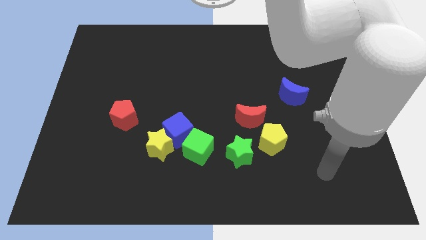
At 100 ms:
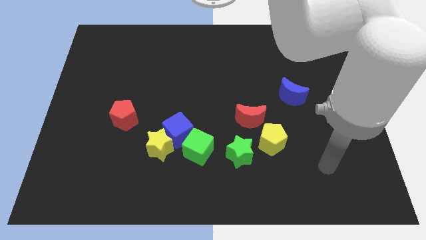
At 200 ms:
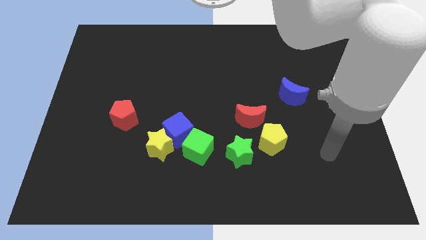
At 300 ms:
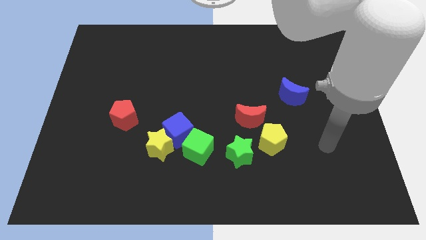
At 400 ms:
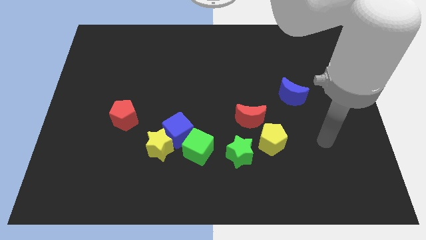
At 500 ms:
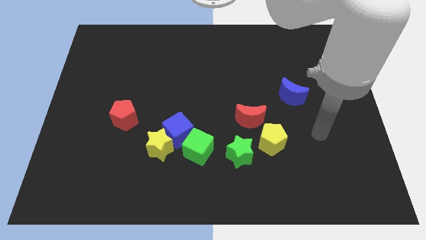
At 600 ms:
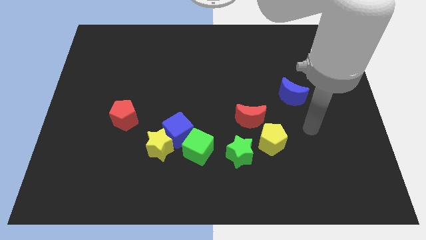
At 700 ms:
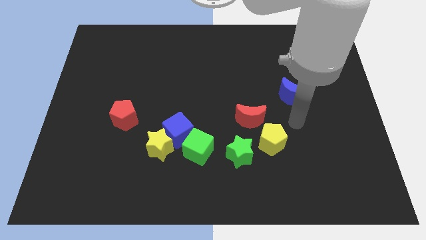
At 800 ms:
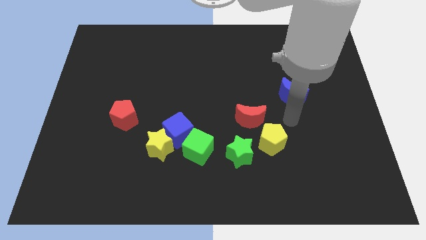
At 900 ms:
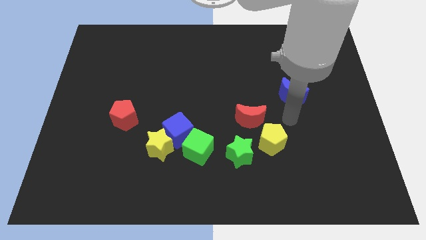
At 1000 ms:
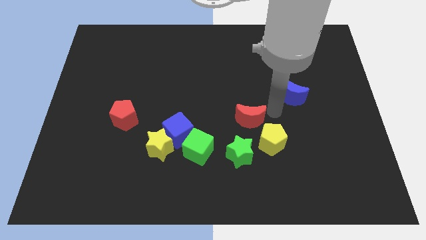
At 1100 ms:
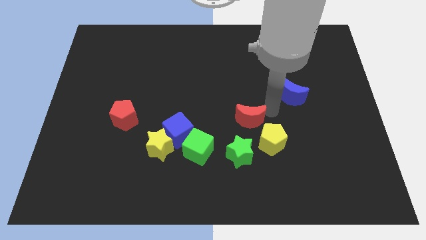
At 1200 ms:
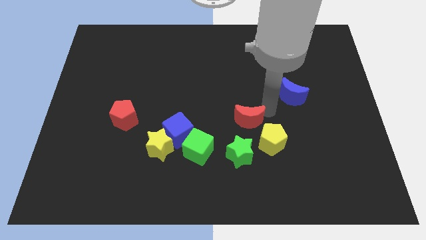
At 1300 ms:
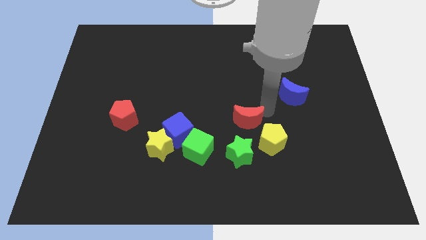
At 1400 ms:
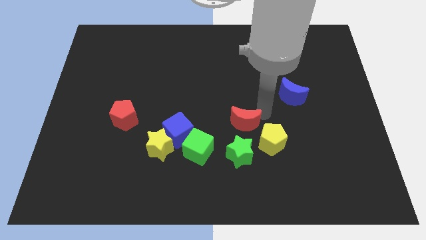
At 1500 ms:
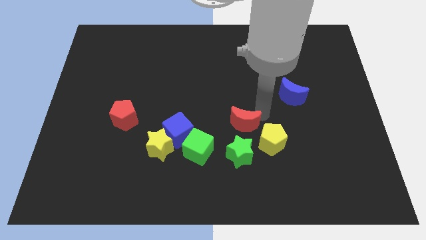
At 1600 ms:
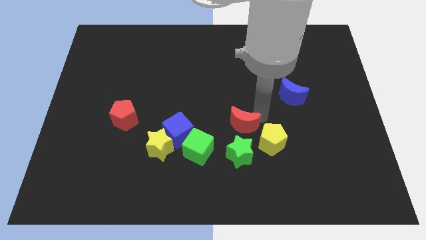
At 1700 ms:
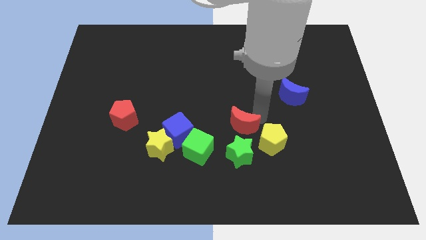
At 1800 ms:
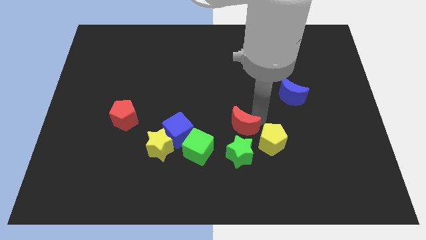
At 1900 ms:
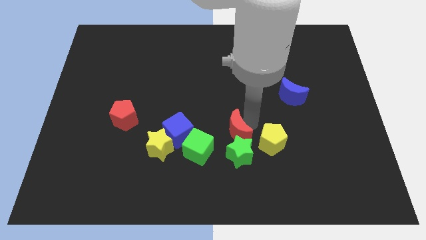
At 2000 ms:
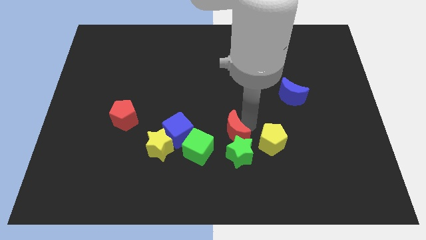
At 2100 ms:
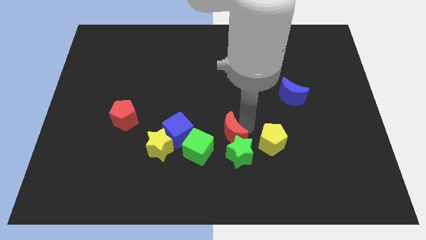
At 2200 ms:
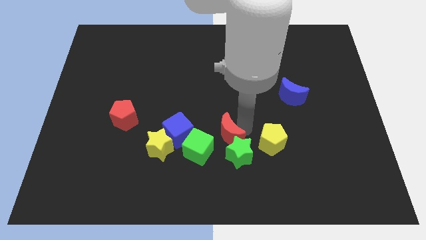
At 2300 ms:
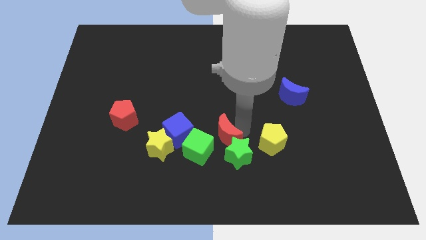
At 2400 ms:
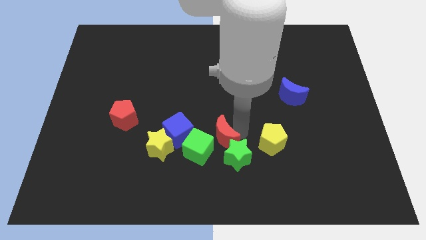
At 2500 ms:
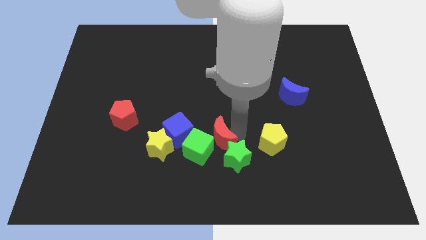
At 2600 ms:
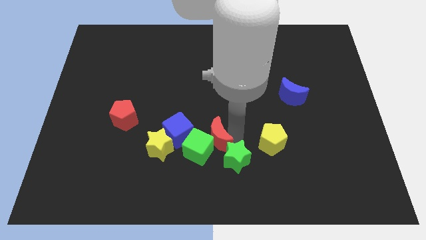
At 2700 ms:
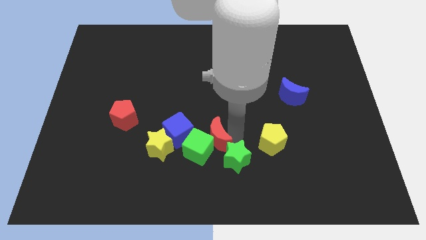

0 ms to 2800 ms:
move the red moon to the green cube

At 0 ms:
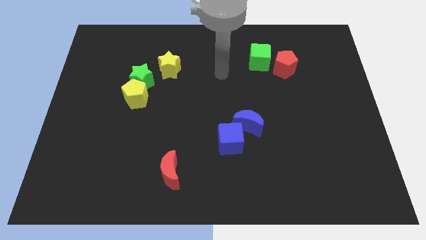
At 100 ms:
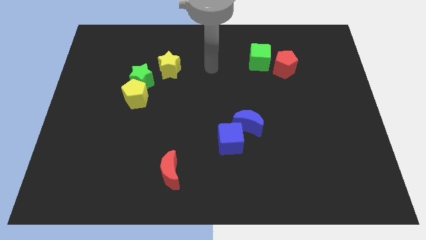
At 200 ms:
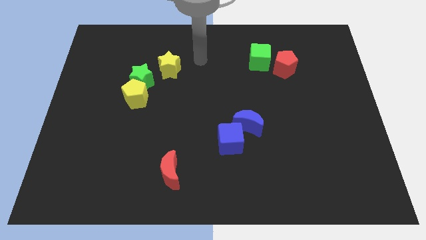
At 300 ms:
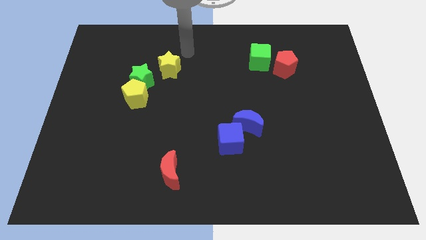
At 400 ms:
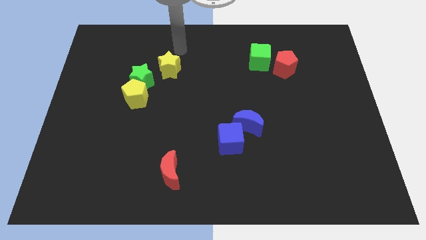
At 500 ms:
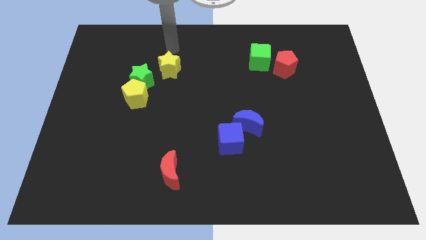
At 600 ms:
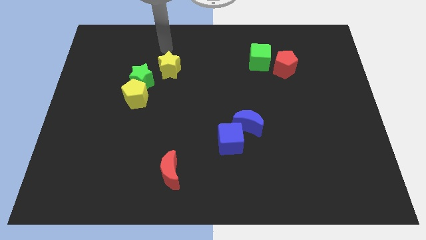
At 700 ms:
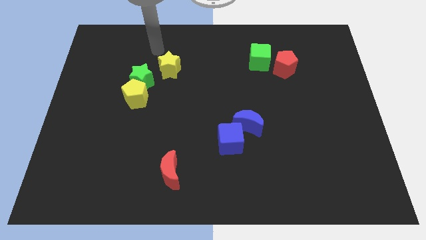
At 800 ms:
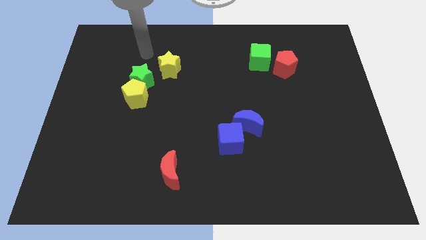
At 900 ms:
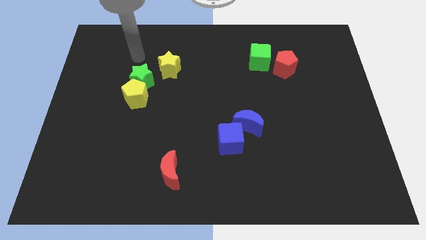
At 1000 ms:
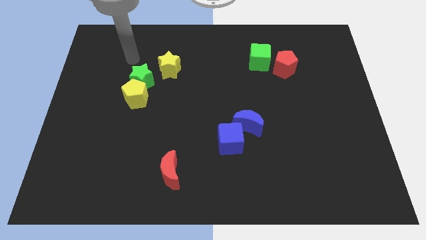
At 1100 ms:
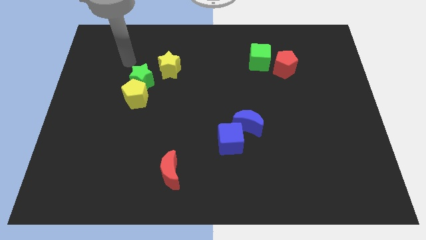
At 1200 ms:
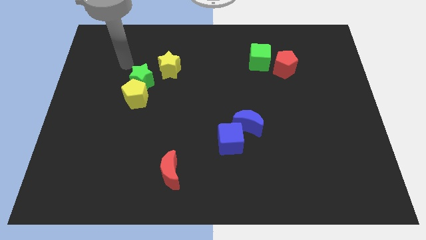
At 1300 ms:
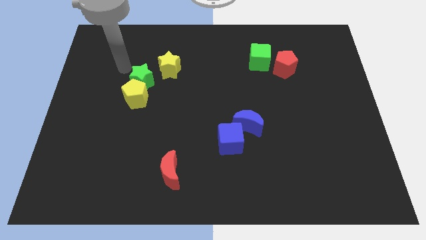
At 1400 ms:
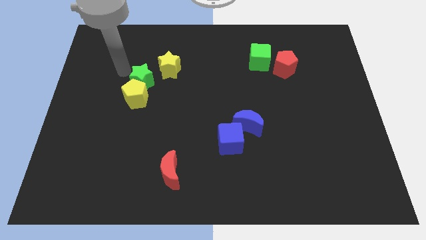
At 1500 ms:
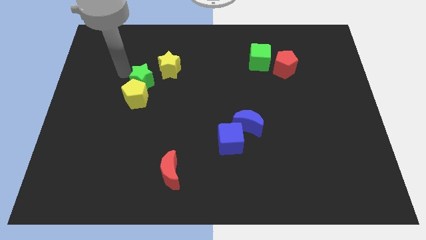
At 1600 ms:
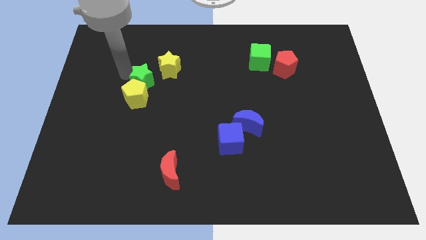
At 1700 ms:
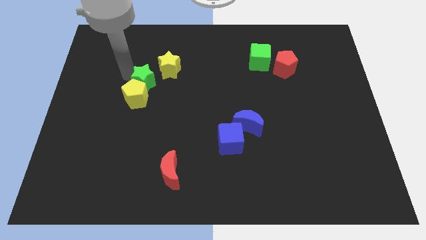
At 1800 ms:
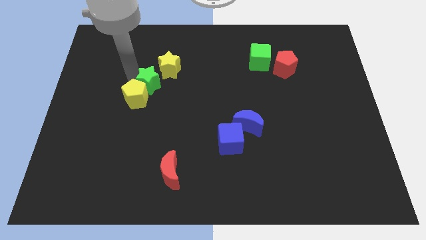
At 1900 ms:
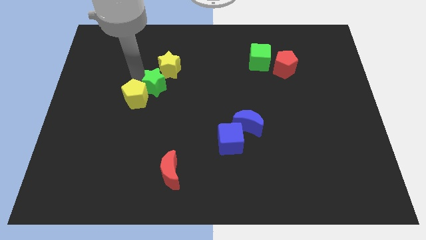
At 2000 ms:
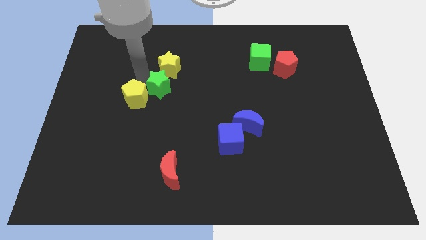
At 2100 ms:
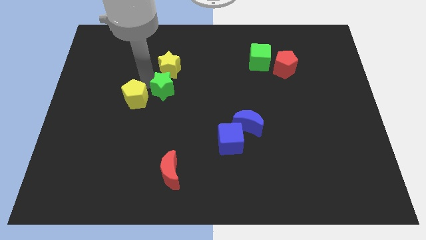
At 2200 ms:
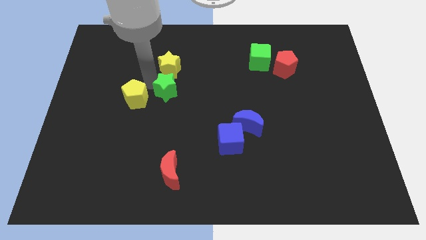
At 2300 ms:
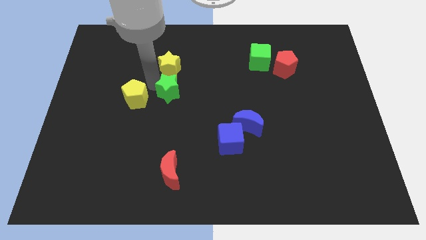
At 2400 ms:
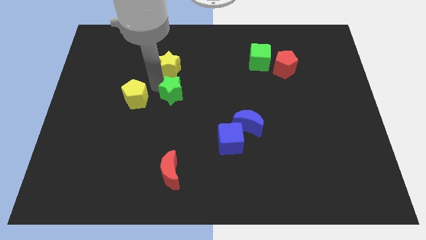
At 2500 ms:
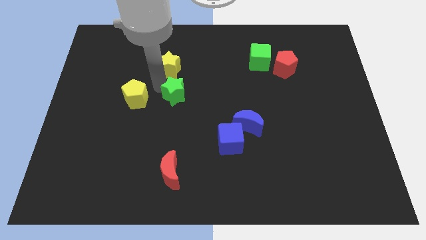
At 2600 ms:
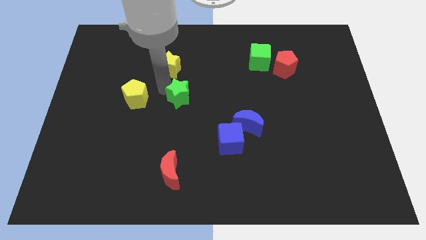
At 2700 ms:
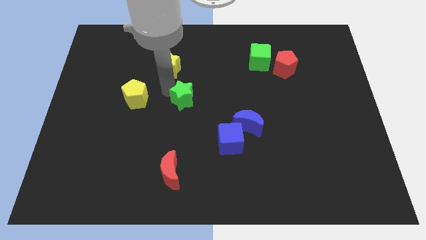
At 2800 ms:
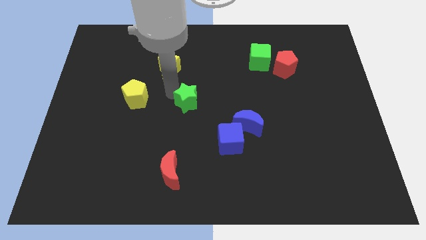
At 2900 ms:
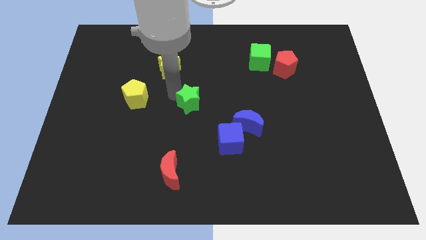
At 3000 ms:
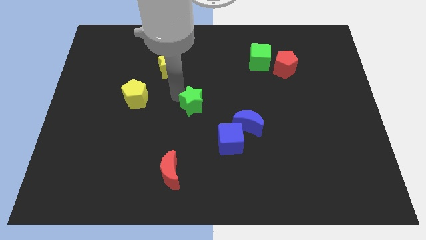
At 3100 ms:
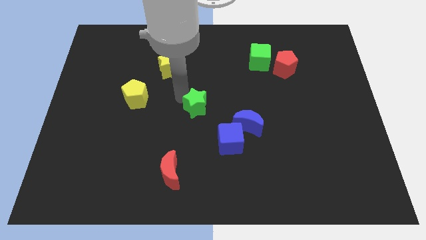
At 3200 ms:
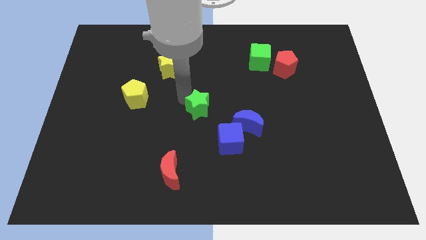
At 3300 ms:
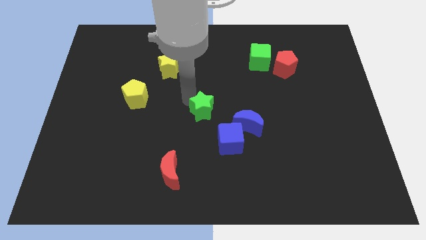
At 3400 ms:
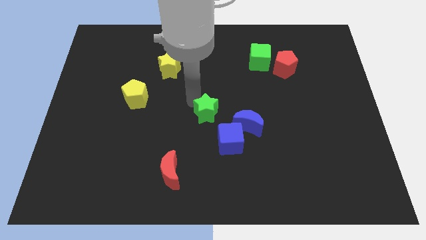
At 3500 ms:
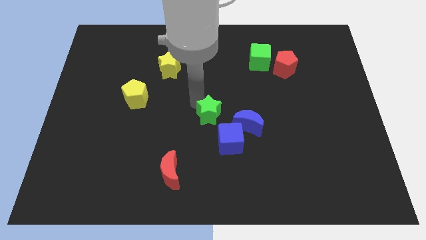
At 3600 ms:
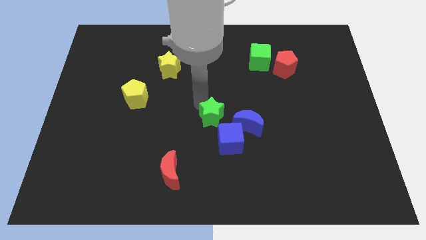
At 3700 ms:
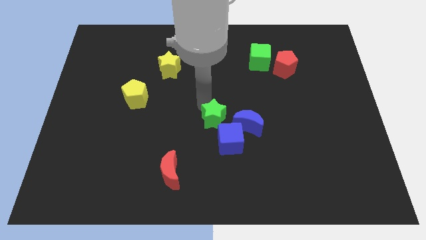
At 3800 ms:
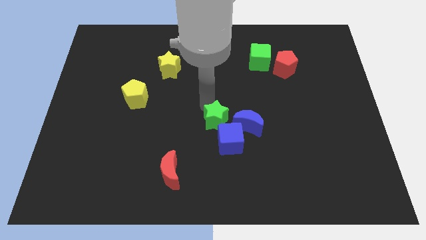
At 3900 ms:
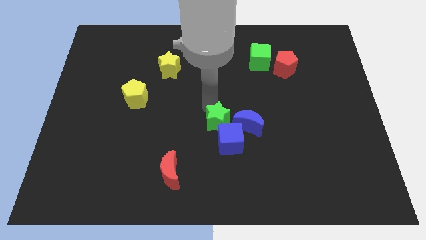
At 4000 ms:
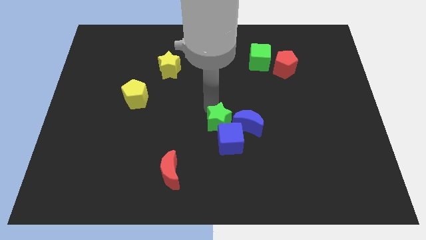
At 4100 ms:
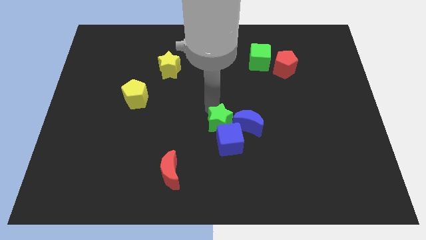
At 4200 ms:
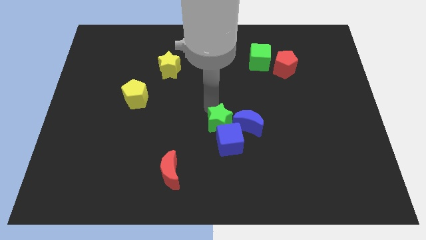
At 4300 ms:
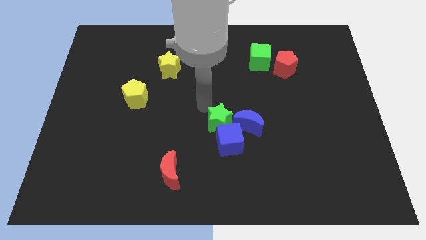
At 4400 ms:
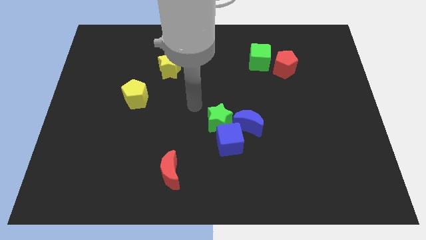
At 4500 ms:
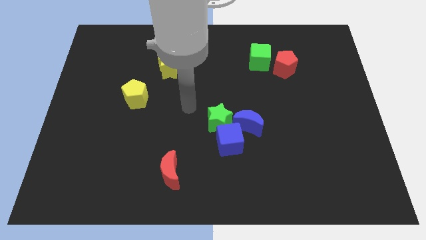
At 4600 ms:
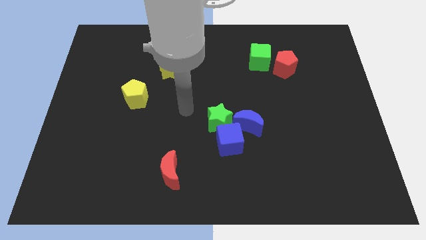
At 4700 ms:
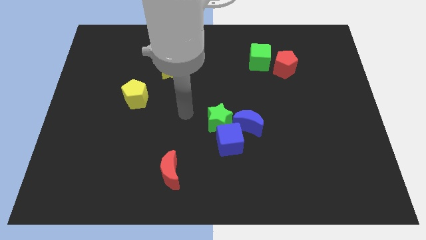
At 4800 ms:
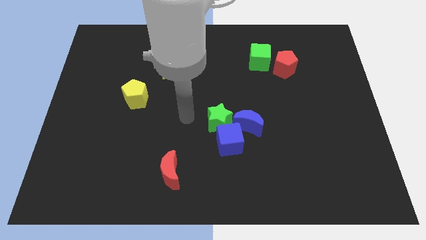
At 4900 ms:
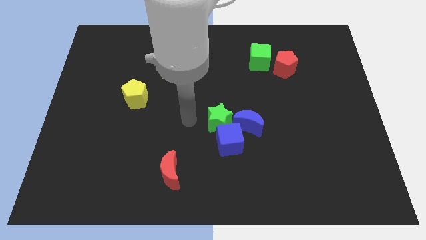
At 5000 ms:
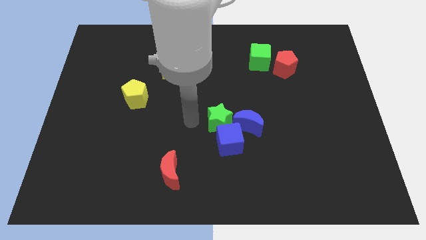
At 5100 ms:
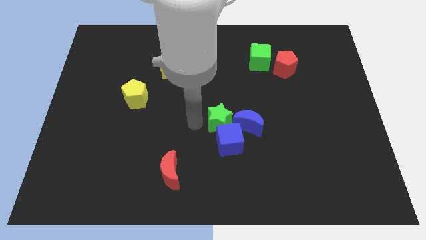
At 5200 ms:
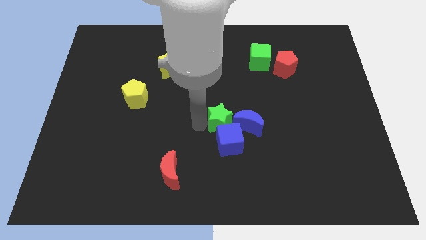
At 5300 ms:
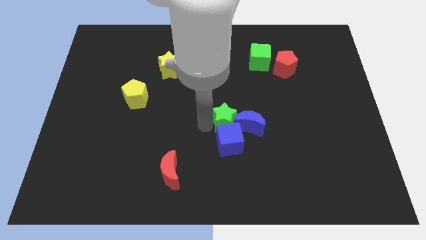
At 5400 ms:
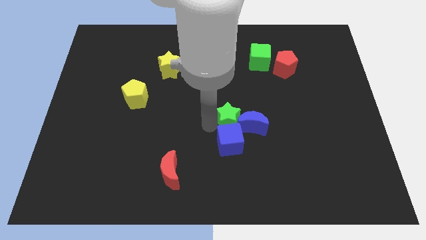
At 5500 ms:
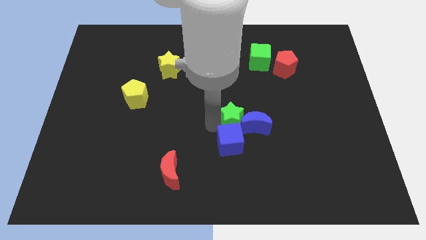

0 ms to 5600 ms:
move the green star close to the blue moon
